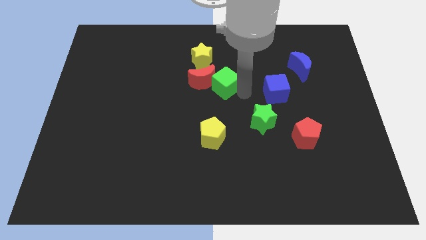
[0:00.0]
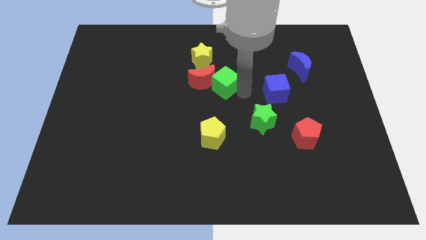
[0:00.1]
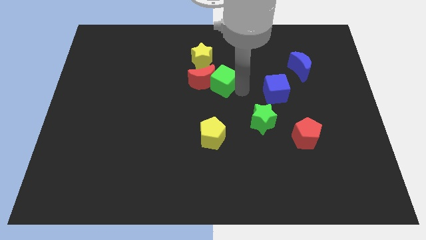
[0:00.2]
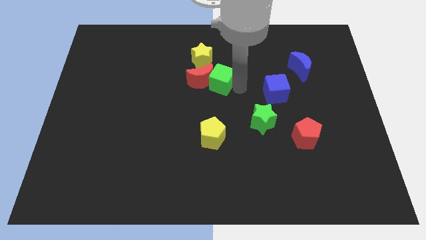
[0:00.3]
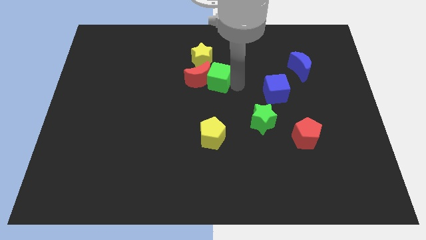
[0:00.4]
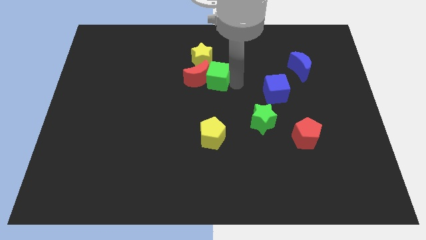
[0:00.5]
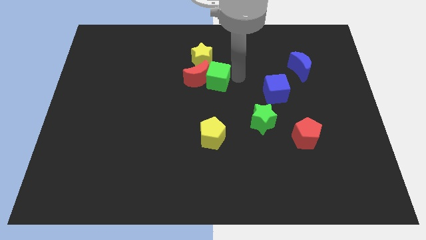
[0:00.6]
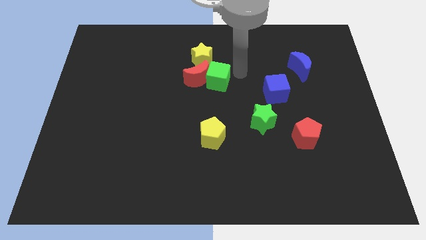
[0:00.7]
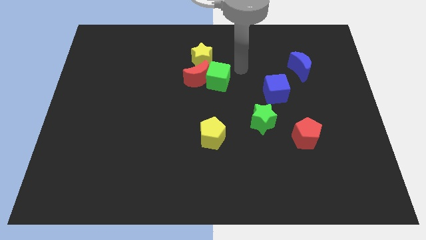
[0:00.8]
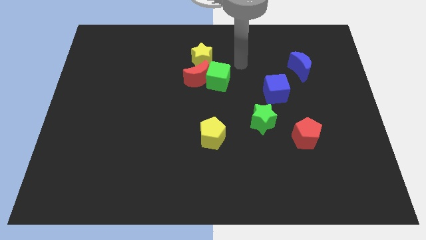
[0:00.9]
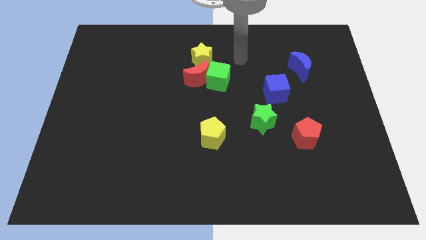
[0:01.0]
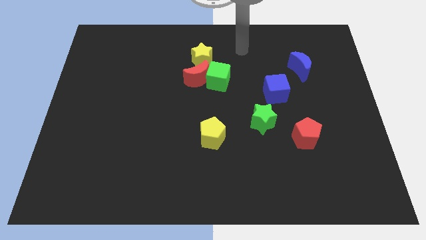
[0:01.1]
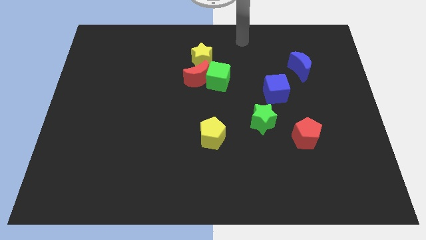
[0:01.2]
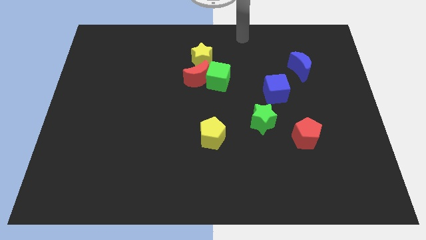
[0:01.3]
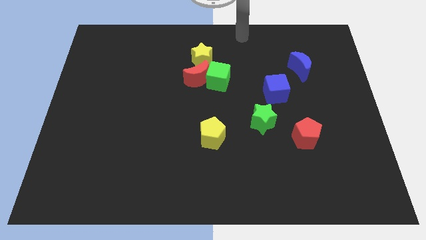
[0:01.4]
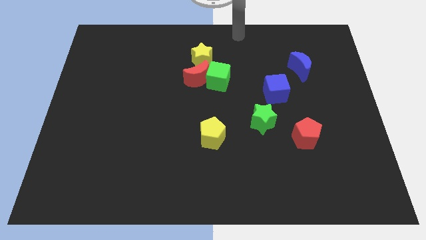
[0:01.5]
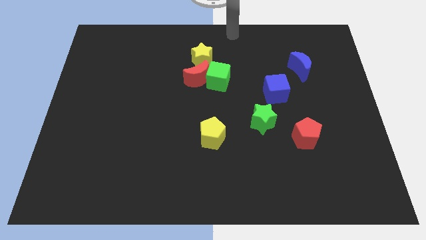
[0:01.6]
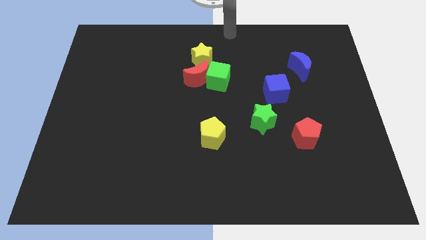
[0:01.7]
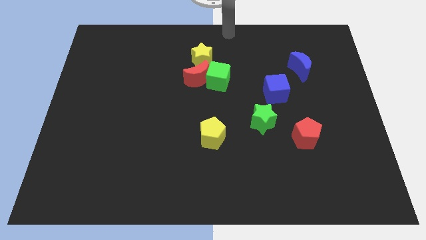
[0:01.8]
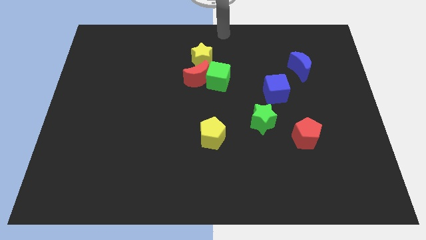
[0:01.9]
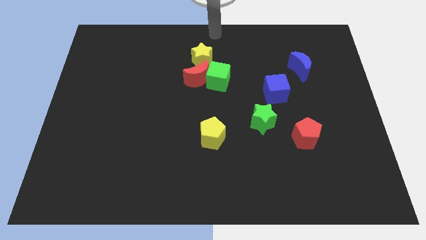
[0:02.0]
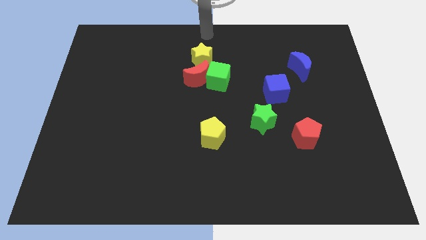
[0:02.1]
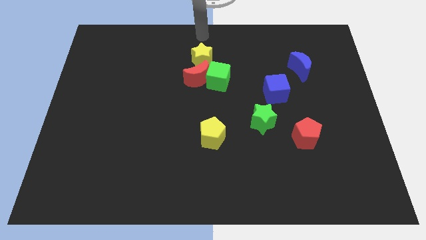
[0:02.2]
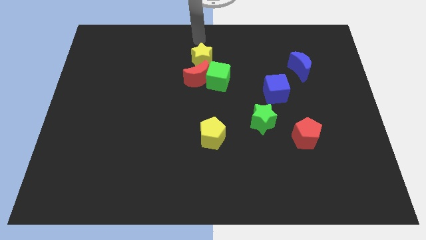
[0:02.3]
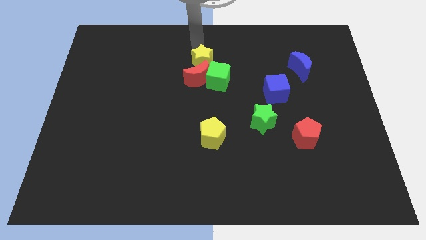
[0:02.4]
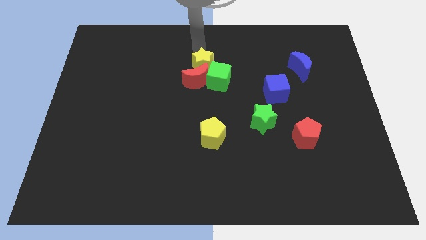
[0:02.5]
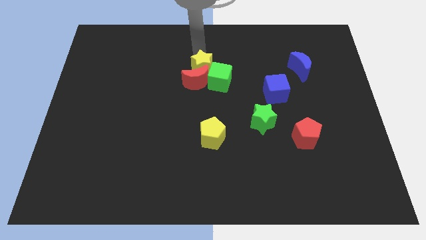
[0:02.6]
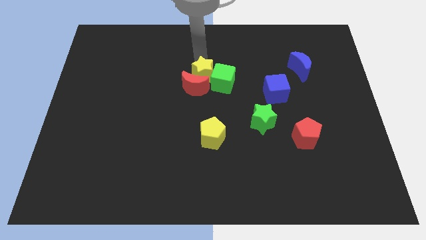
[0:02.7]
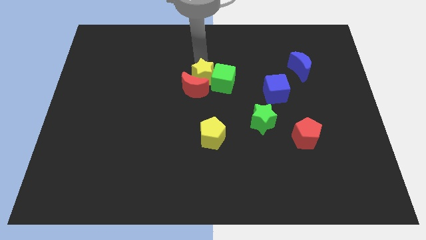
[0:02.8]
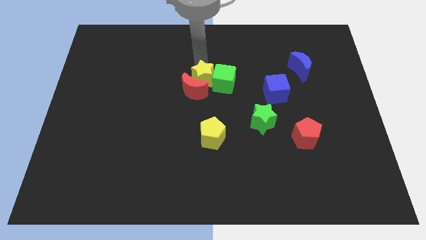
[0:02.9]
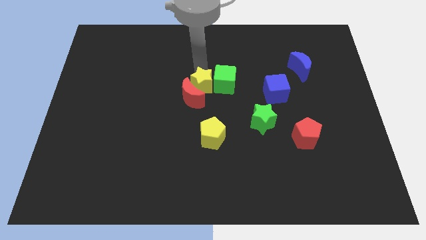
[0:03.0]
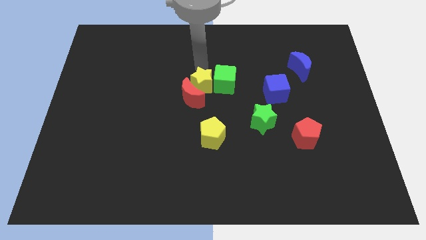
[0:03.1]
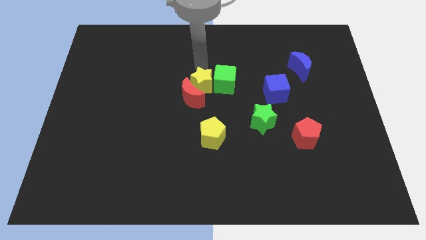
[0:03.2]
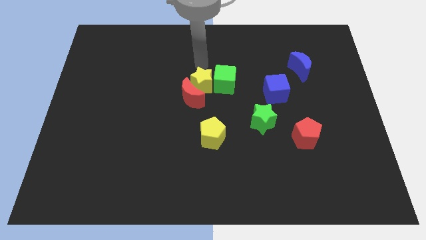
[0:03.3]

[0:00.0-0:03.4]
push the yellow star in between green cube and red crescent

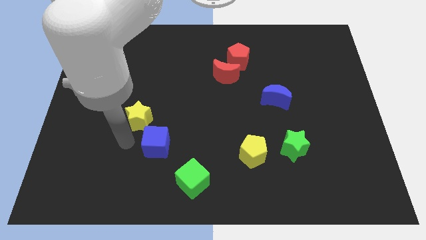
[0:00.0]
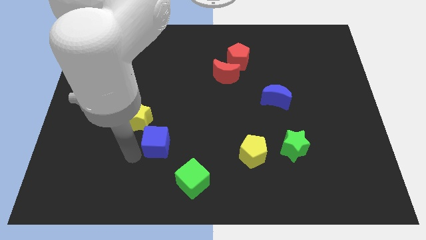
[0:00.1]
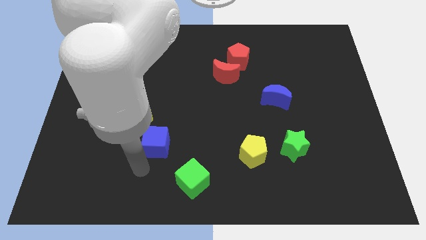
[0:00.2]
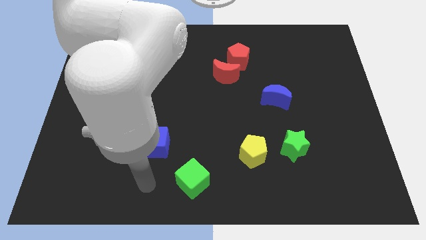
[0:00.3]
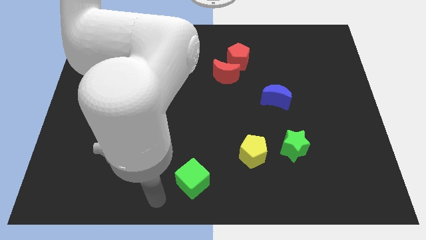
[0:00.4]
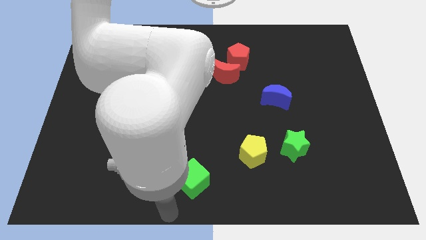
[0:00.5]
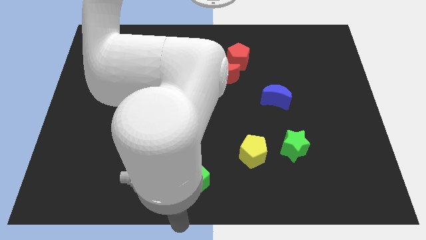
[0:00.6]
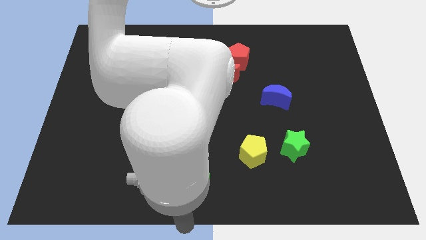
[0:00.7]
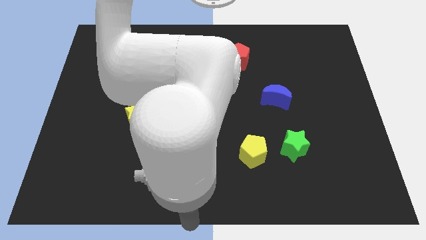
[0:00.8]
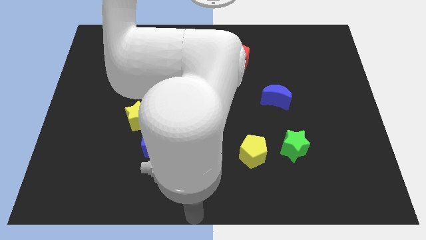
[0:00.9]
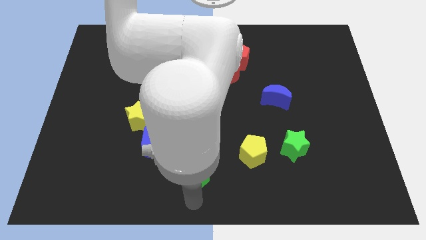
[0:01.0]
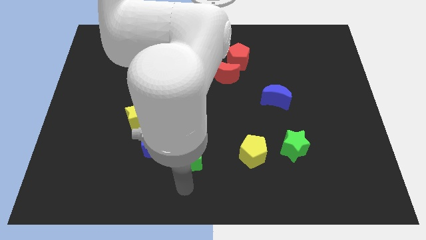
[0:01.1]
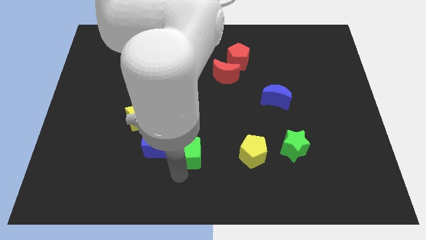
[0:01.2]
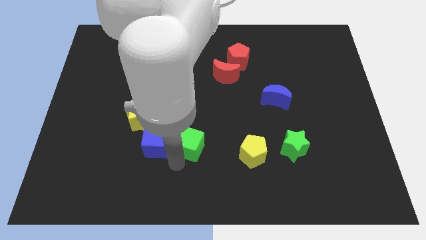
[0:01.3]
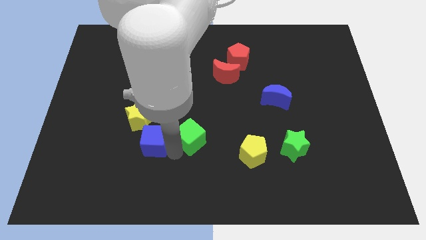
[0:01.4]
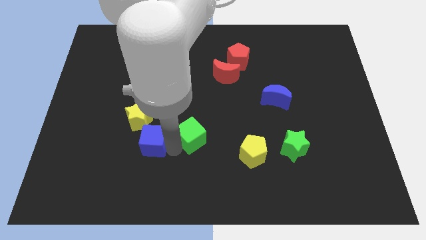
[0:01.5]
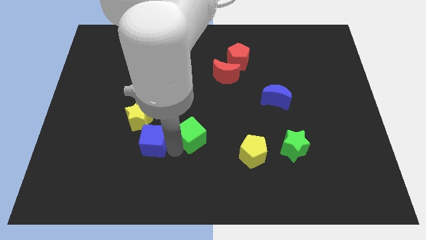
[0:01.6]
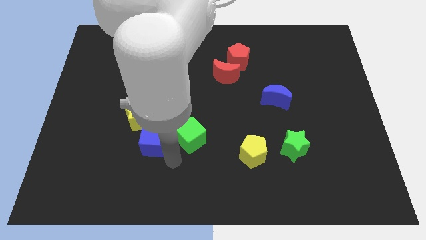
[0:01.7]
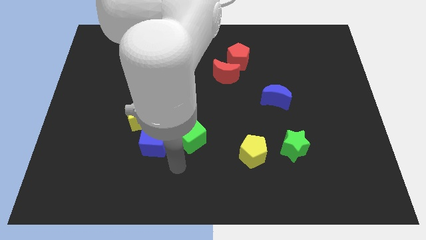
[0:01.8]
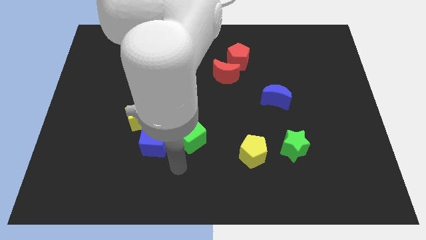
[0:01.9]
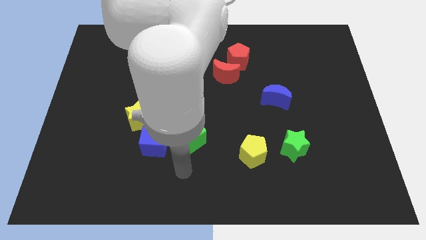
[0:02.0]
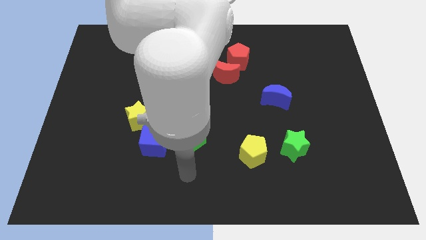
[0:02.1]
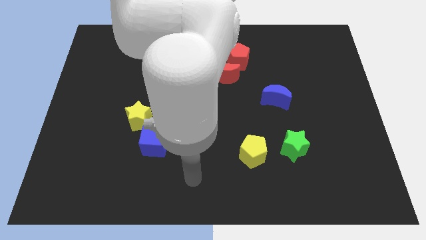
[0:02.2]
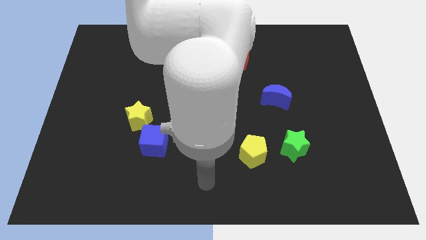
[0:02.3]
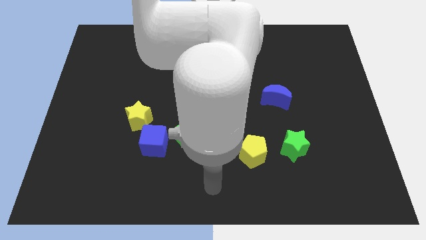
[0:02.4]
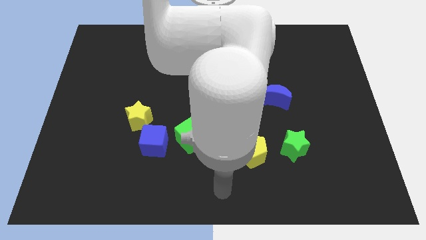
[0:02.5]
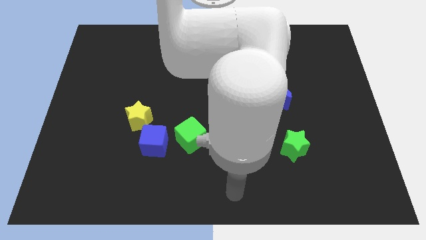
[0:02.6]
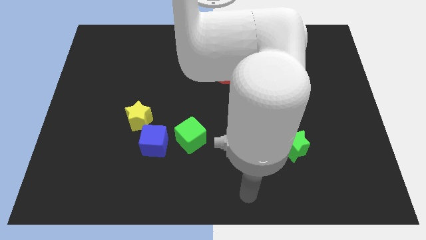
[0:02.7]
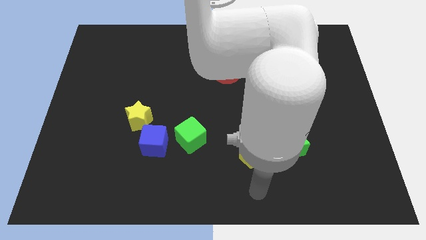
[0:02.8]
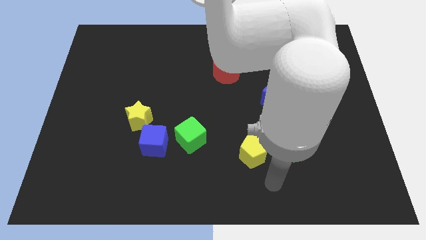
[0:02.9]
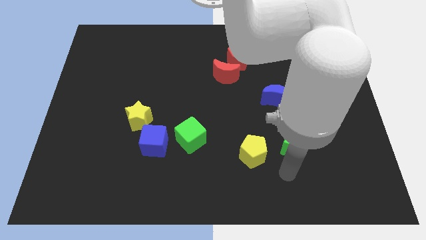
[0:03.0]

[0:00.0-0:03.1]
move the green cube to the right of the blue cube

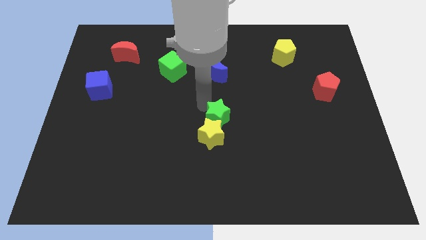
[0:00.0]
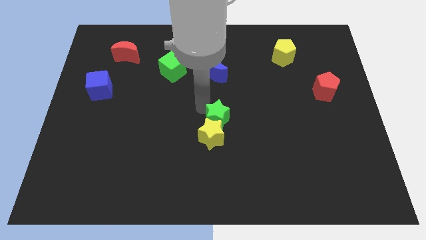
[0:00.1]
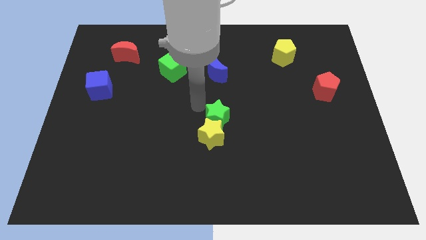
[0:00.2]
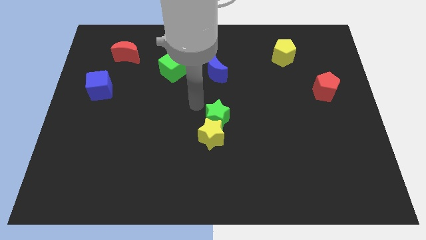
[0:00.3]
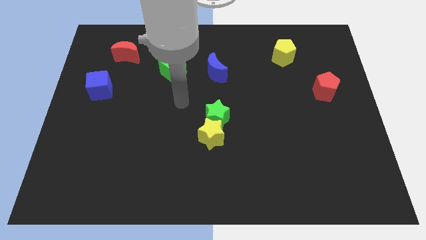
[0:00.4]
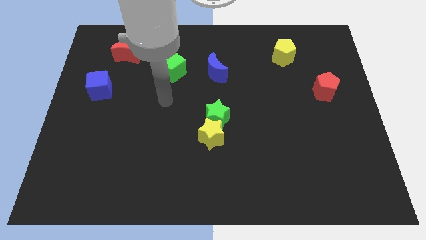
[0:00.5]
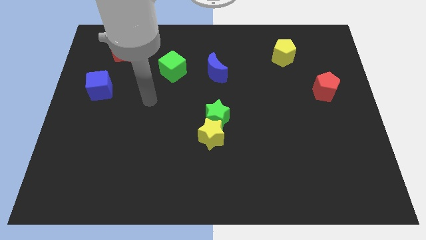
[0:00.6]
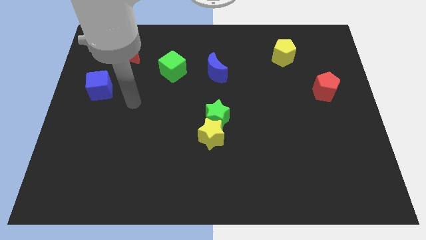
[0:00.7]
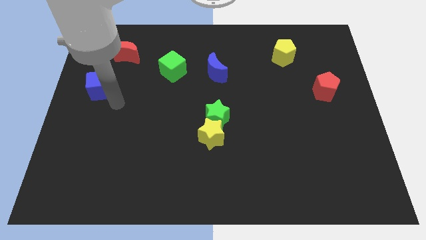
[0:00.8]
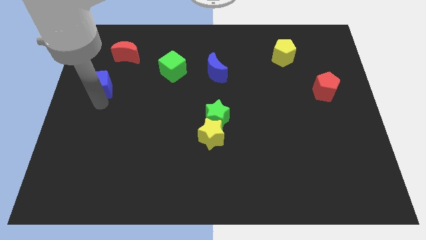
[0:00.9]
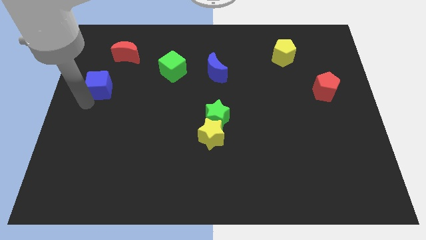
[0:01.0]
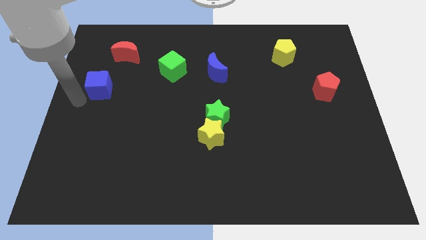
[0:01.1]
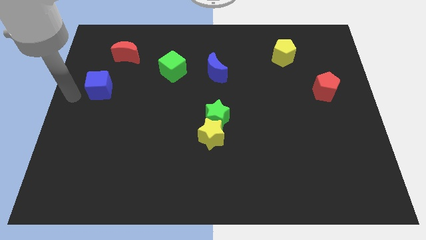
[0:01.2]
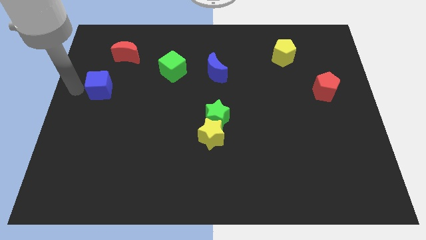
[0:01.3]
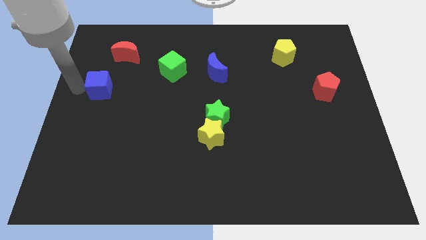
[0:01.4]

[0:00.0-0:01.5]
move your arm towards the blue cube

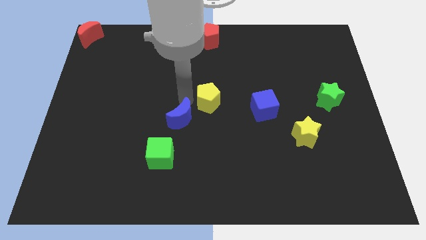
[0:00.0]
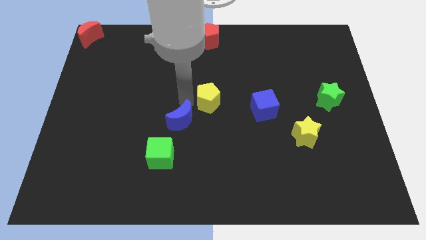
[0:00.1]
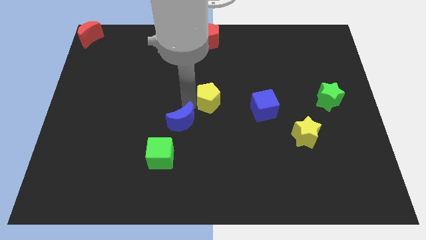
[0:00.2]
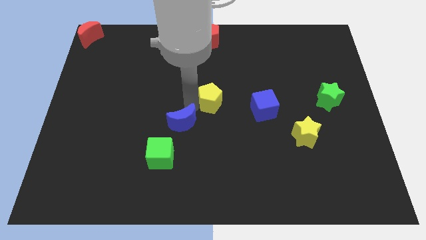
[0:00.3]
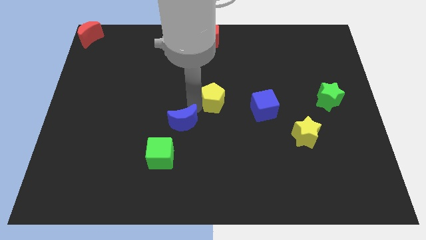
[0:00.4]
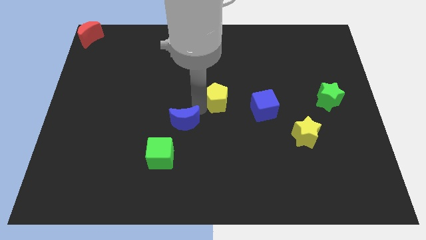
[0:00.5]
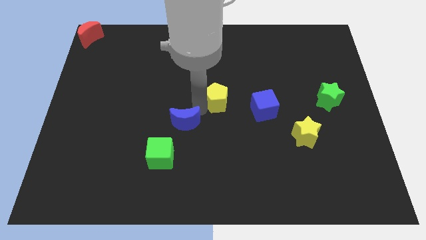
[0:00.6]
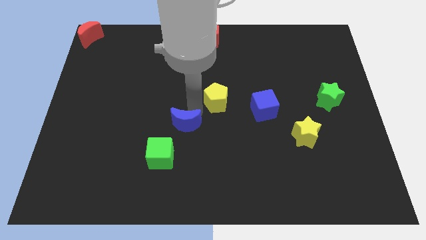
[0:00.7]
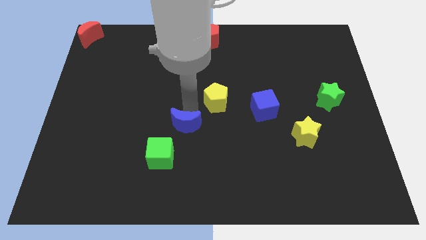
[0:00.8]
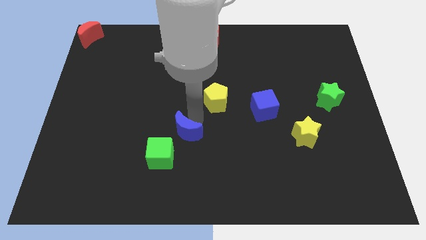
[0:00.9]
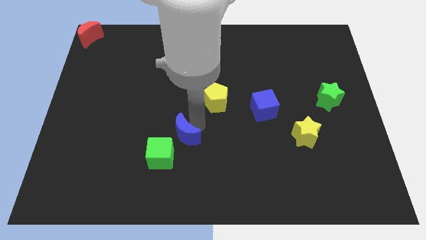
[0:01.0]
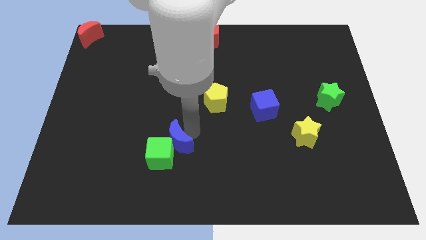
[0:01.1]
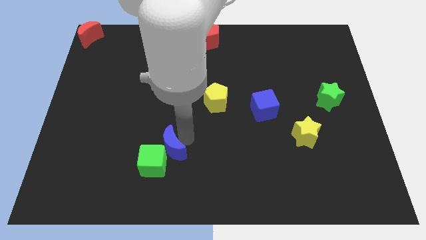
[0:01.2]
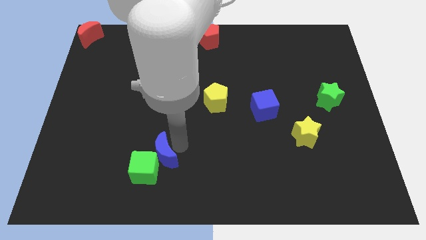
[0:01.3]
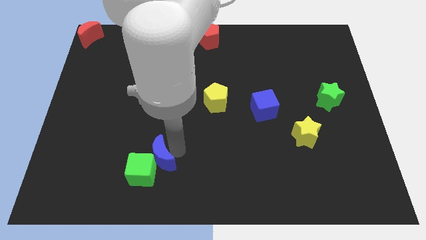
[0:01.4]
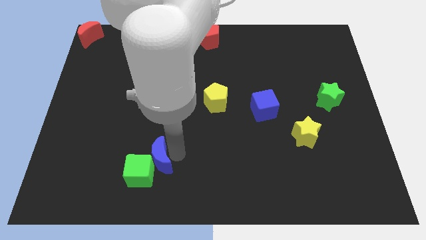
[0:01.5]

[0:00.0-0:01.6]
push blue moon into the green cube
